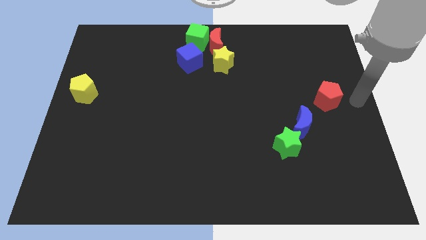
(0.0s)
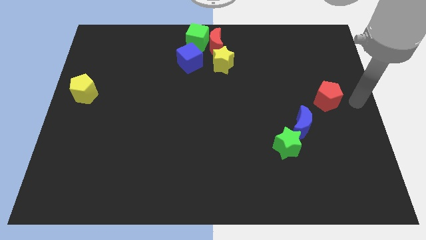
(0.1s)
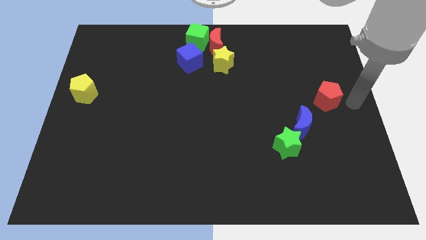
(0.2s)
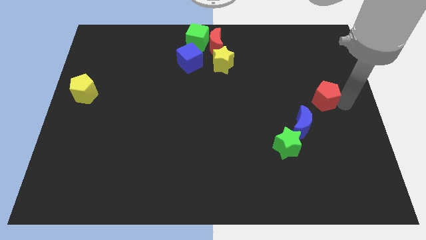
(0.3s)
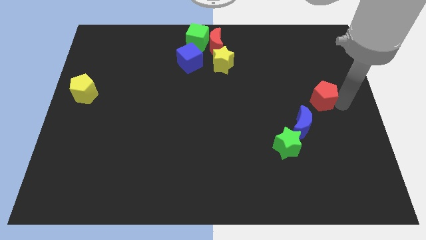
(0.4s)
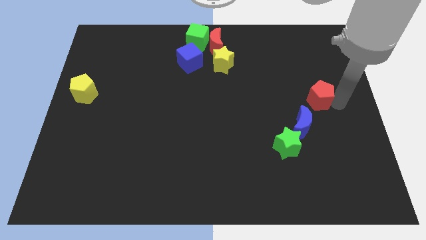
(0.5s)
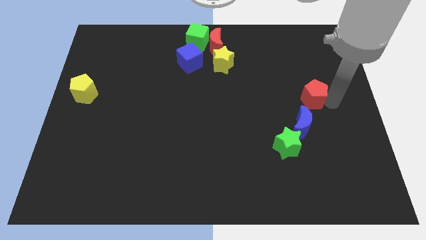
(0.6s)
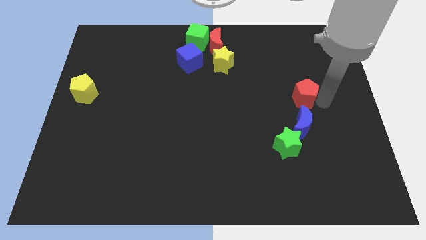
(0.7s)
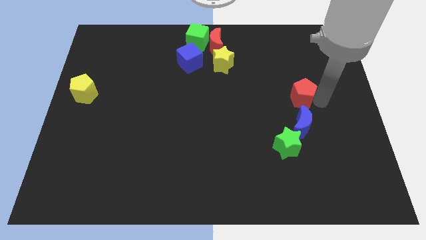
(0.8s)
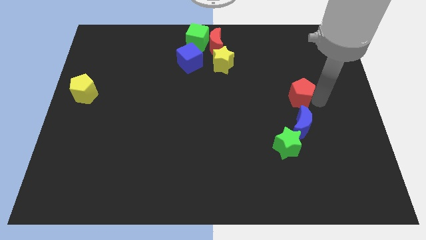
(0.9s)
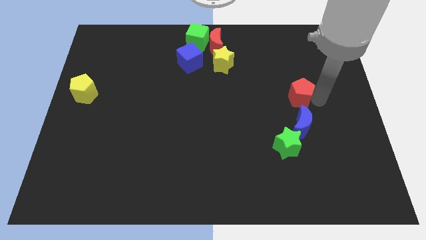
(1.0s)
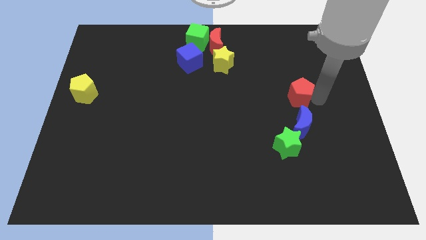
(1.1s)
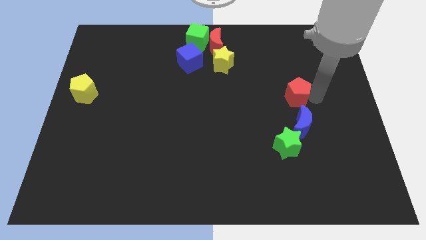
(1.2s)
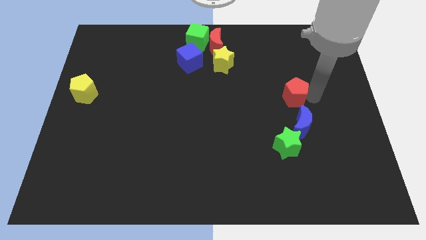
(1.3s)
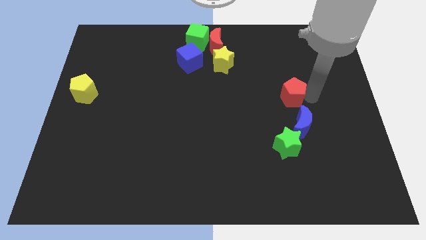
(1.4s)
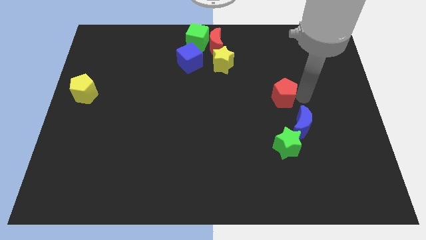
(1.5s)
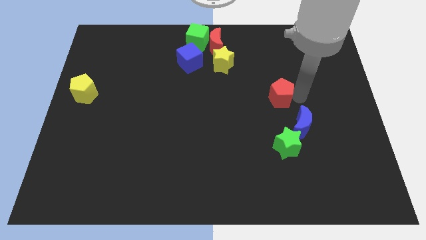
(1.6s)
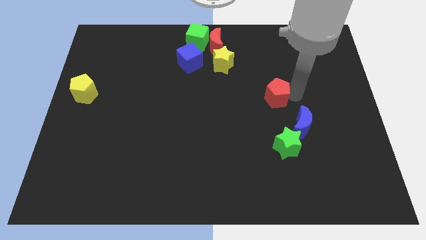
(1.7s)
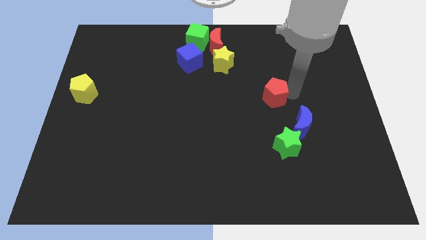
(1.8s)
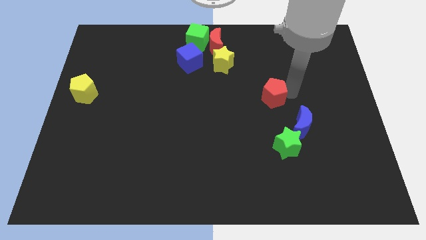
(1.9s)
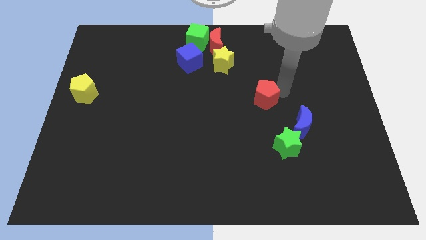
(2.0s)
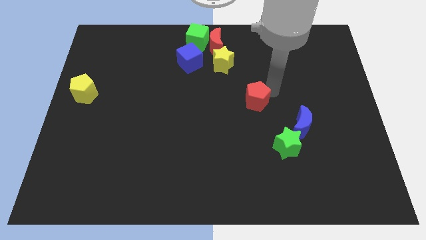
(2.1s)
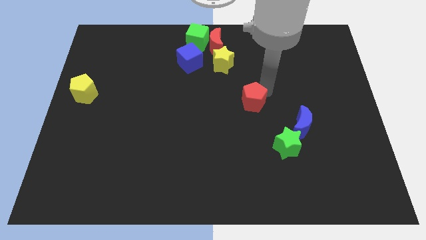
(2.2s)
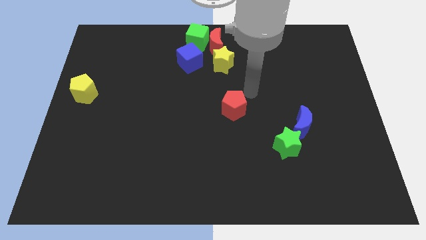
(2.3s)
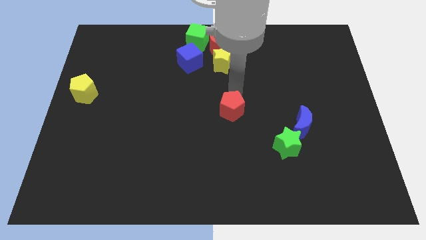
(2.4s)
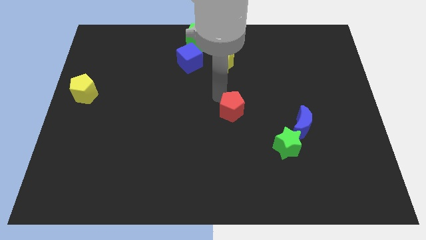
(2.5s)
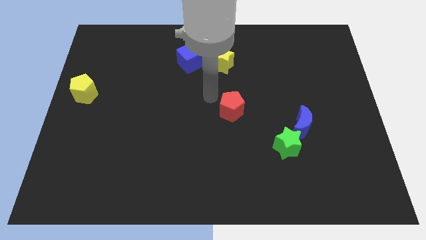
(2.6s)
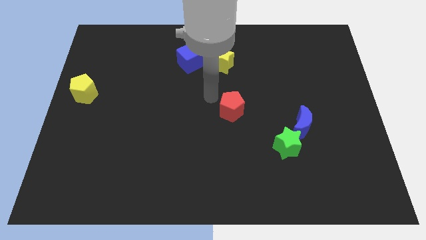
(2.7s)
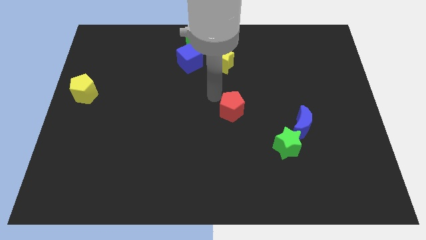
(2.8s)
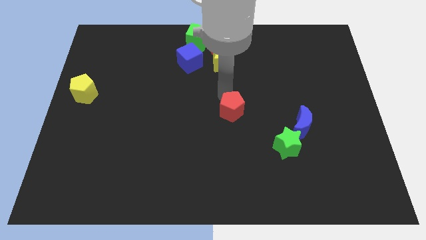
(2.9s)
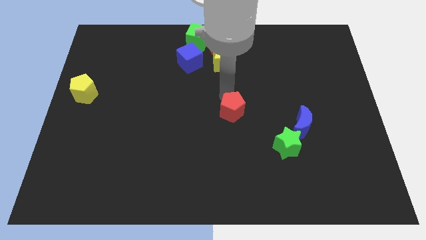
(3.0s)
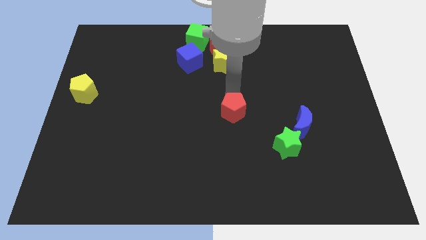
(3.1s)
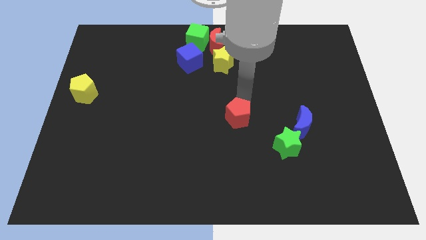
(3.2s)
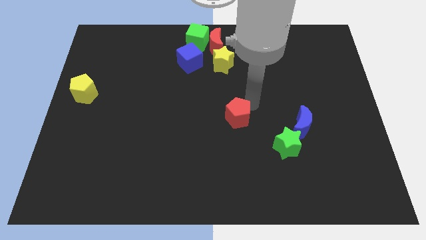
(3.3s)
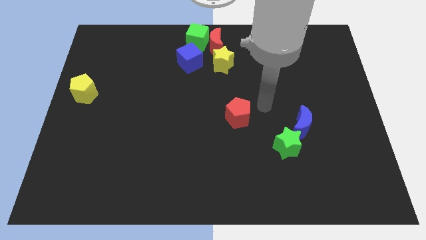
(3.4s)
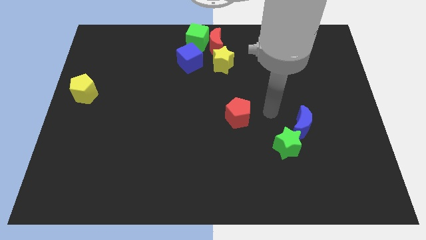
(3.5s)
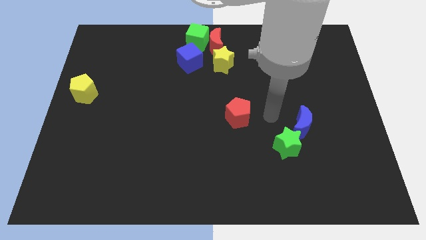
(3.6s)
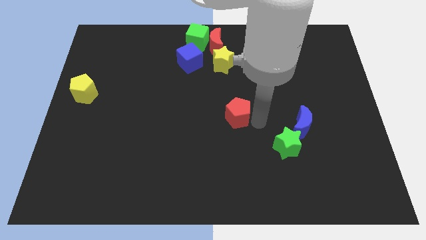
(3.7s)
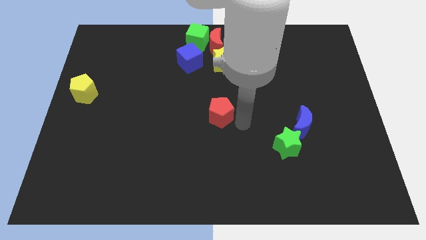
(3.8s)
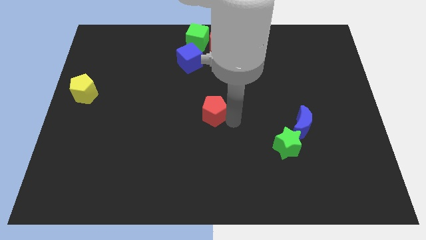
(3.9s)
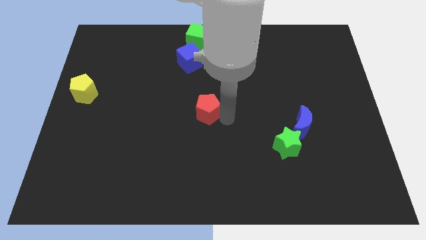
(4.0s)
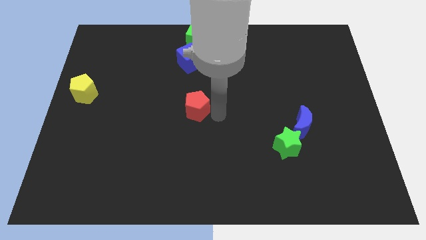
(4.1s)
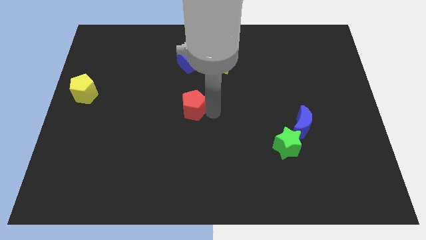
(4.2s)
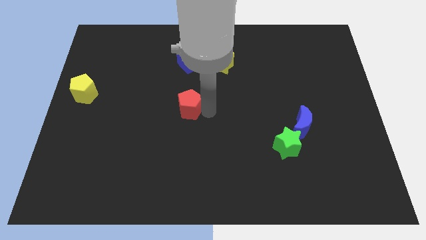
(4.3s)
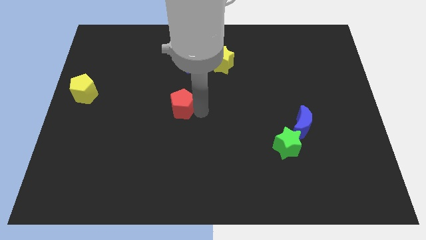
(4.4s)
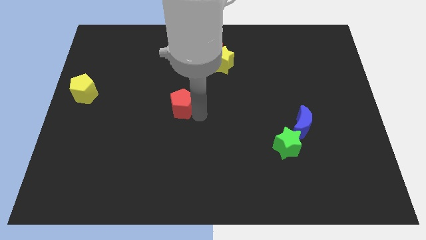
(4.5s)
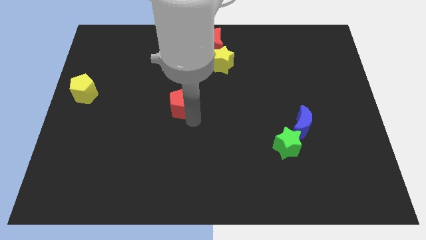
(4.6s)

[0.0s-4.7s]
place the red pentagon at the bottom of blue cube

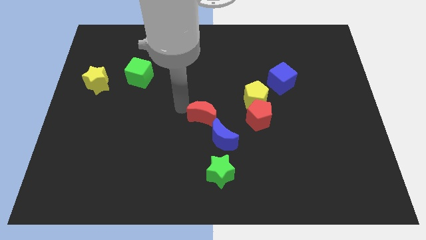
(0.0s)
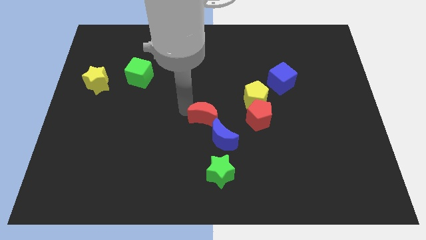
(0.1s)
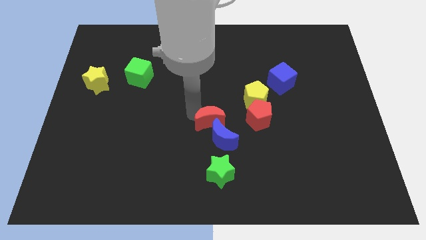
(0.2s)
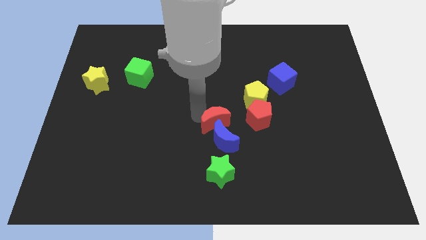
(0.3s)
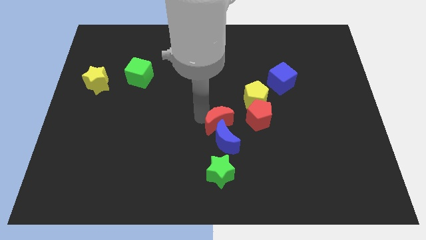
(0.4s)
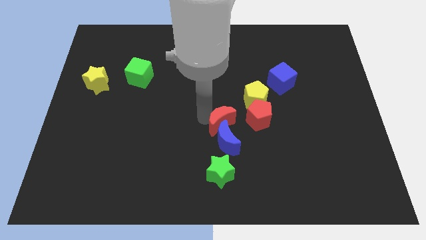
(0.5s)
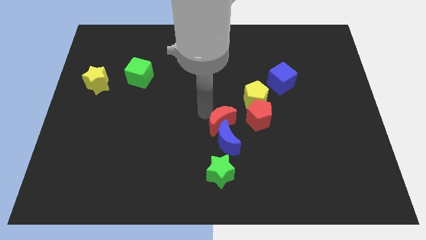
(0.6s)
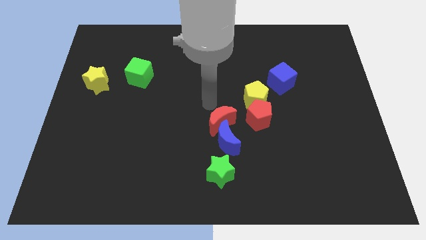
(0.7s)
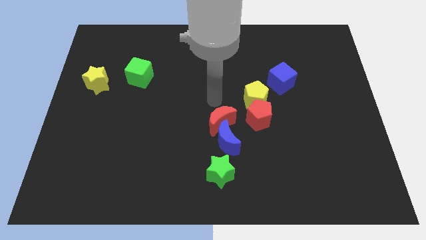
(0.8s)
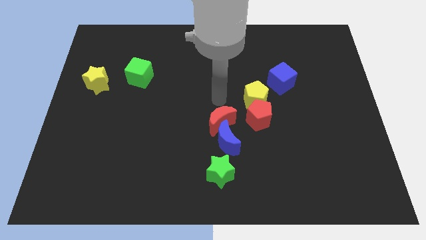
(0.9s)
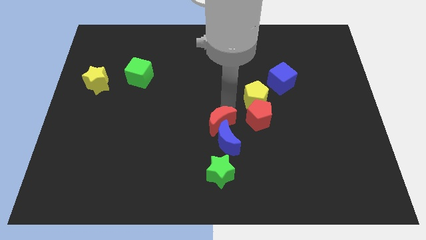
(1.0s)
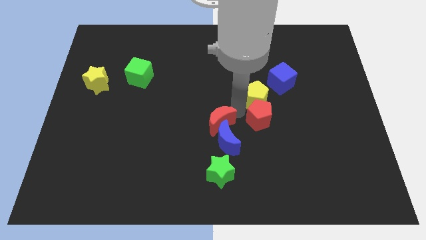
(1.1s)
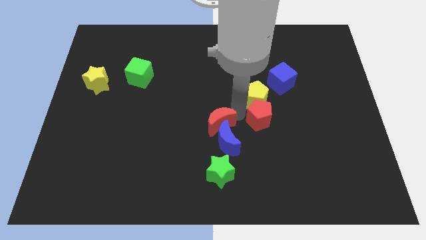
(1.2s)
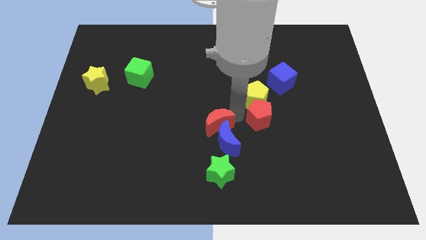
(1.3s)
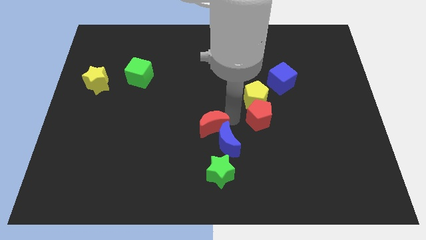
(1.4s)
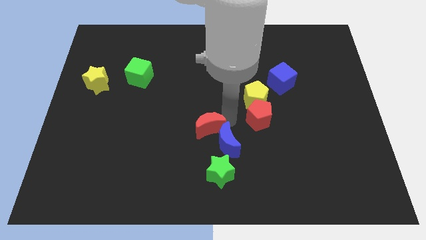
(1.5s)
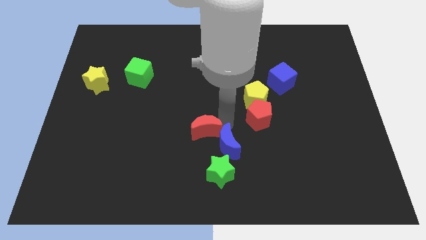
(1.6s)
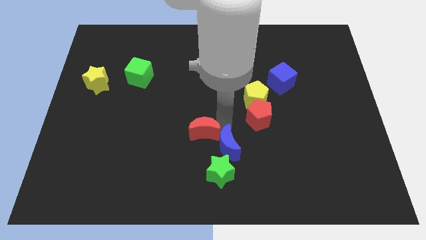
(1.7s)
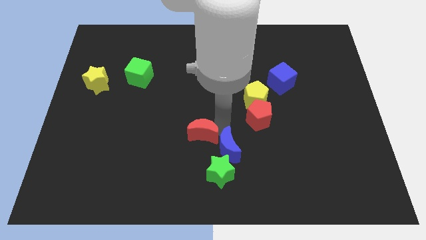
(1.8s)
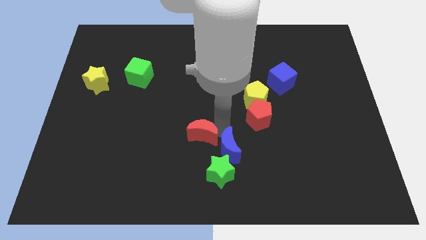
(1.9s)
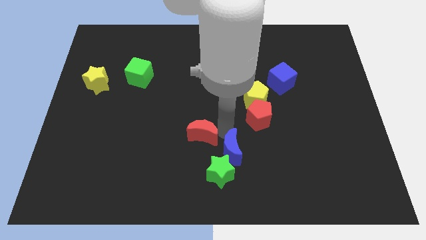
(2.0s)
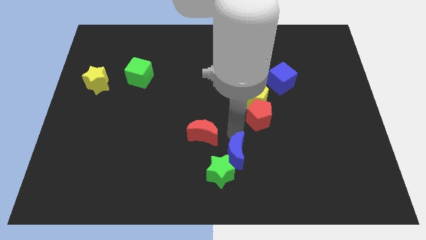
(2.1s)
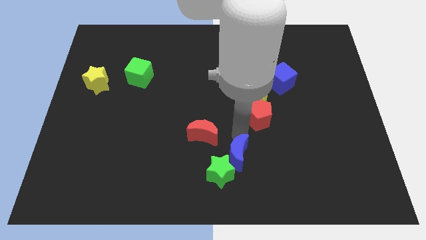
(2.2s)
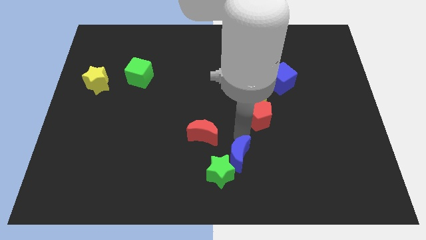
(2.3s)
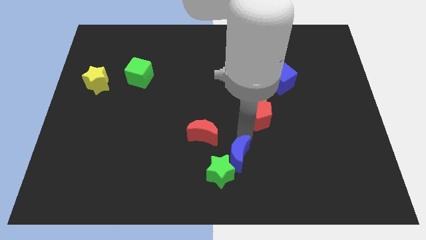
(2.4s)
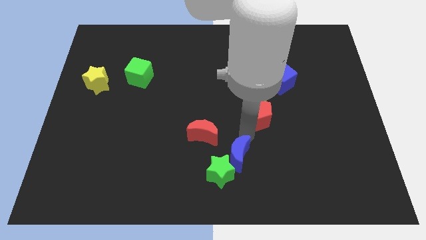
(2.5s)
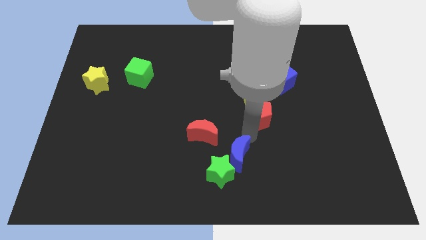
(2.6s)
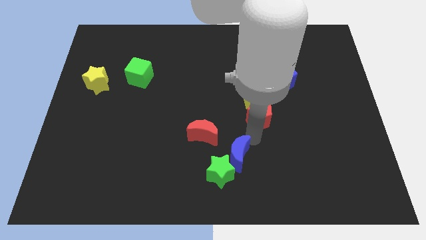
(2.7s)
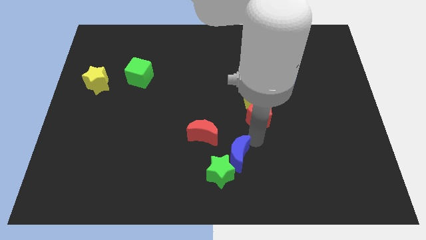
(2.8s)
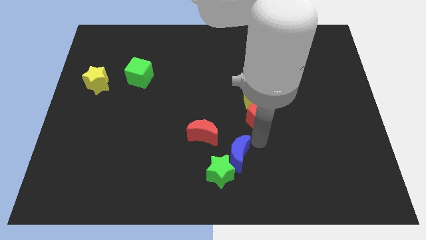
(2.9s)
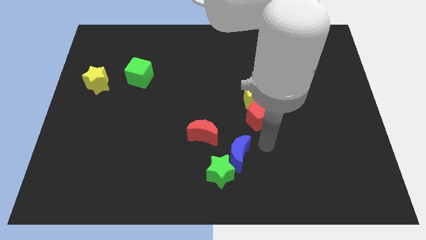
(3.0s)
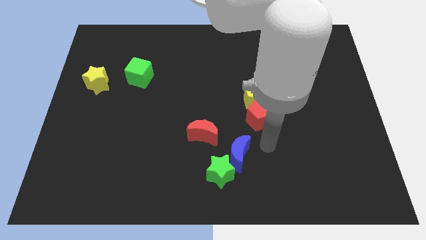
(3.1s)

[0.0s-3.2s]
separate red moon and the blue crescent

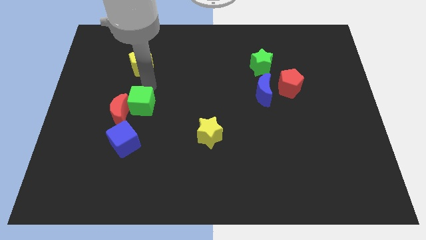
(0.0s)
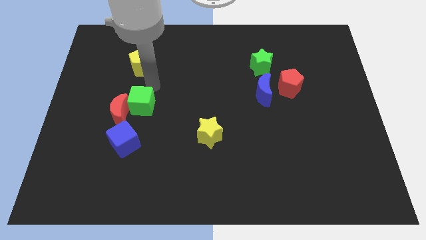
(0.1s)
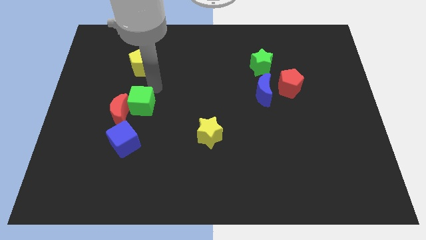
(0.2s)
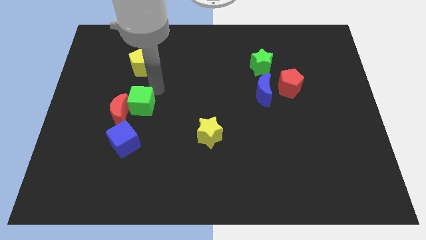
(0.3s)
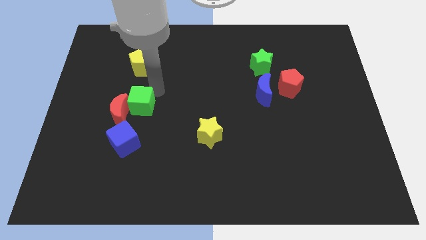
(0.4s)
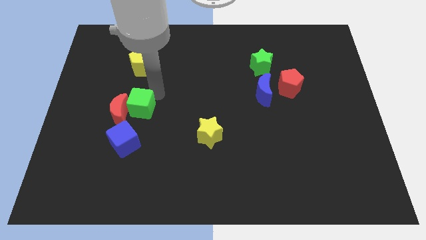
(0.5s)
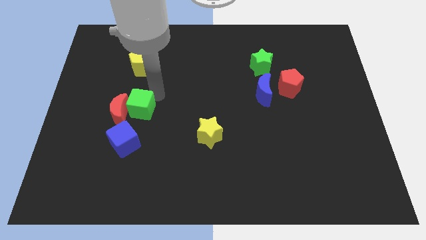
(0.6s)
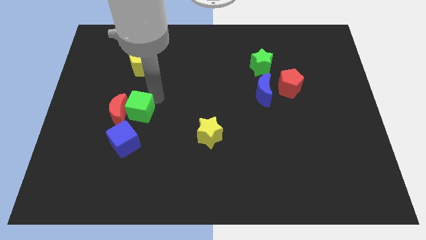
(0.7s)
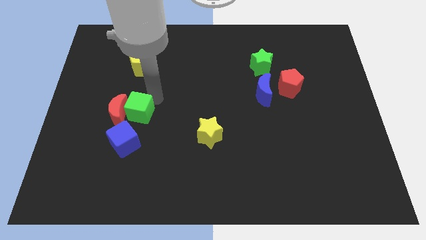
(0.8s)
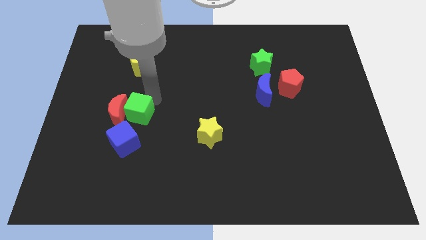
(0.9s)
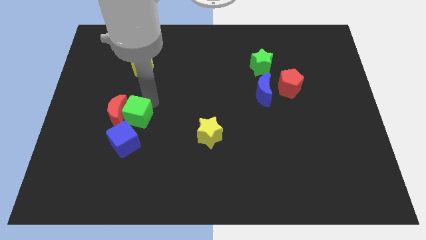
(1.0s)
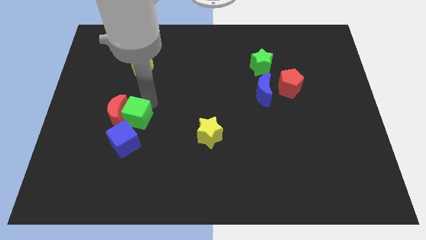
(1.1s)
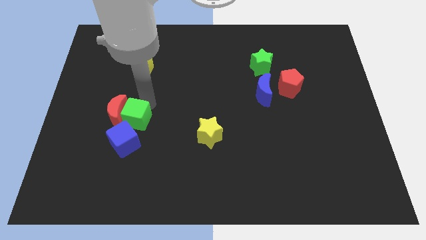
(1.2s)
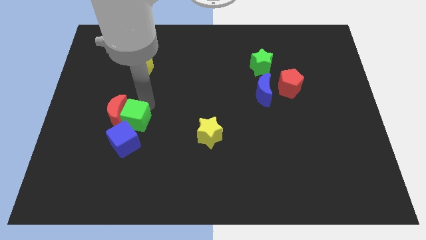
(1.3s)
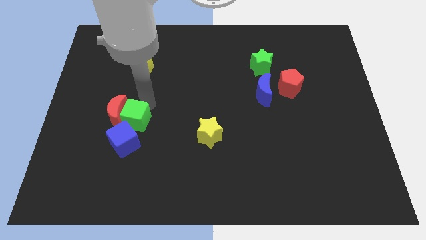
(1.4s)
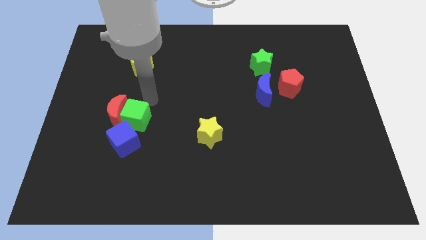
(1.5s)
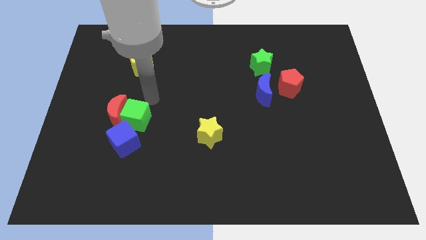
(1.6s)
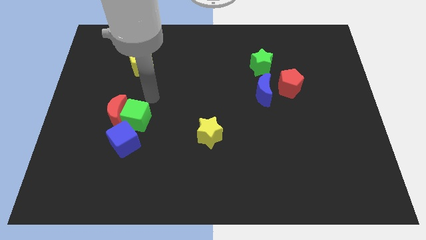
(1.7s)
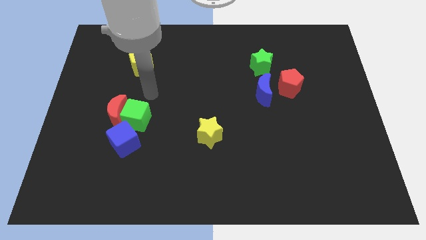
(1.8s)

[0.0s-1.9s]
place green cube to the right of red moon
